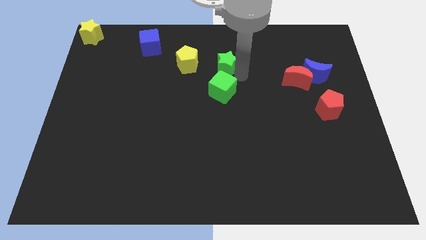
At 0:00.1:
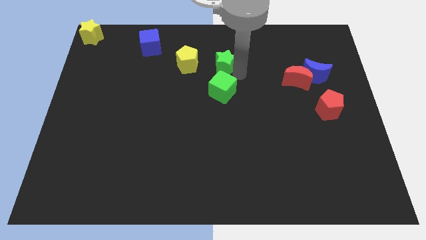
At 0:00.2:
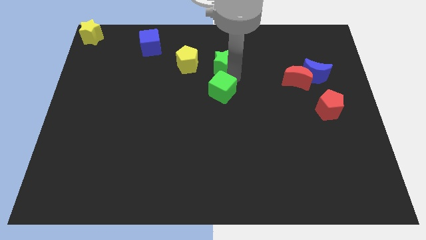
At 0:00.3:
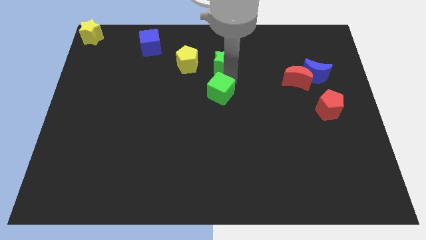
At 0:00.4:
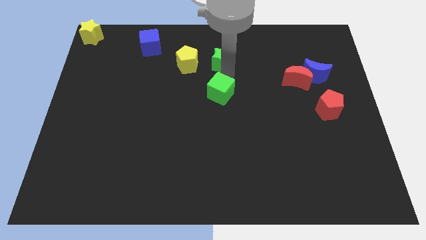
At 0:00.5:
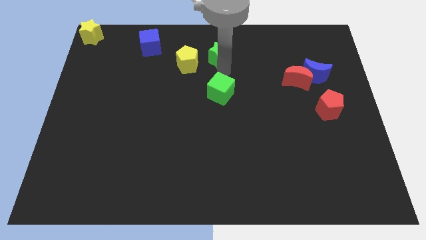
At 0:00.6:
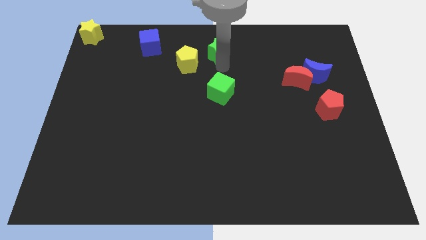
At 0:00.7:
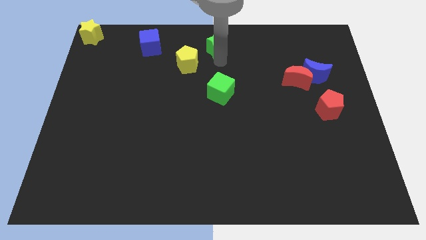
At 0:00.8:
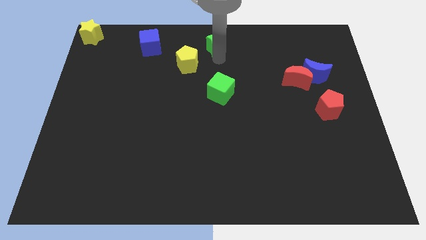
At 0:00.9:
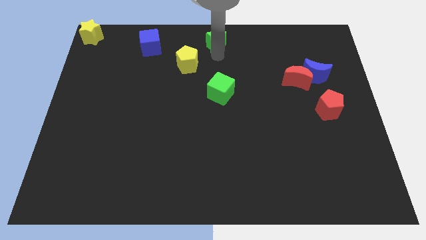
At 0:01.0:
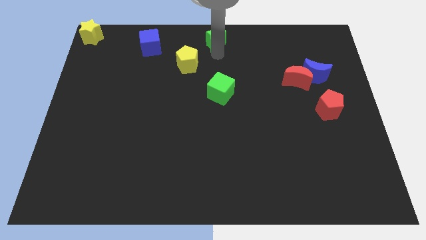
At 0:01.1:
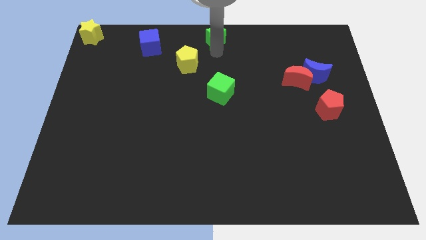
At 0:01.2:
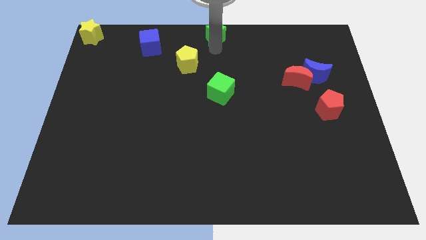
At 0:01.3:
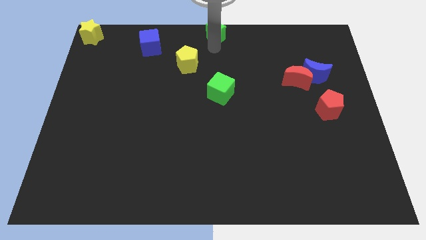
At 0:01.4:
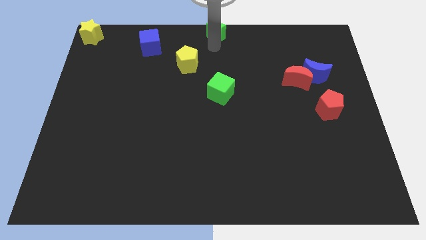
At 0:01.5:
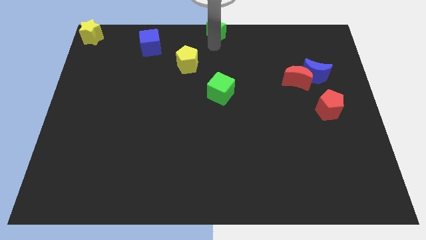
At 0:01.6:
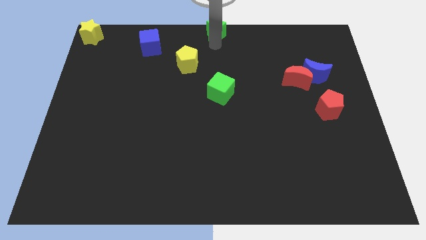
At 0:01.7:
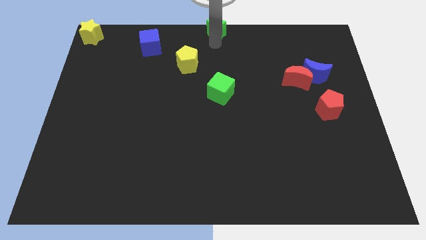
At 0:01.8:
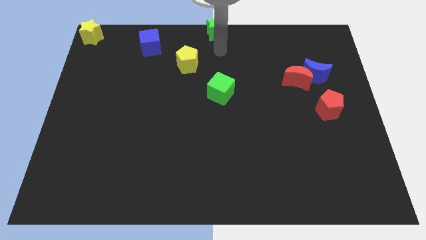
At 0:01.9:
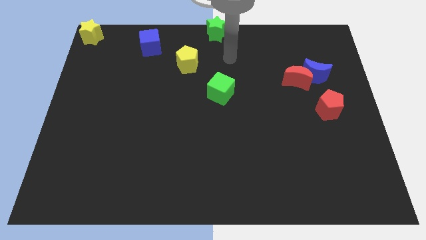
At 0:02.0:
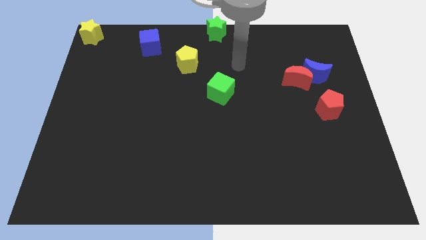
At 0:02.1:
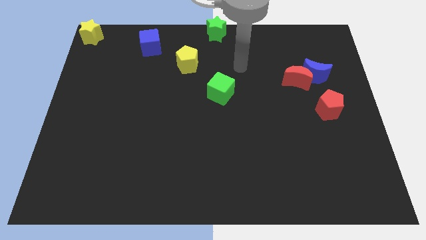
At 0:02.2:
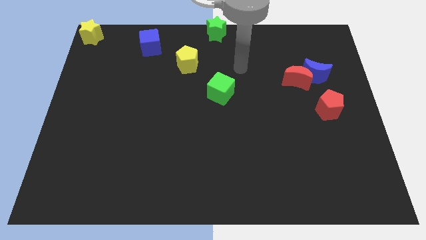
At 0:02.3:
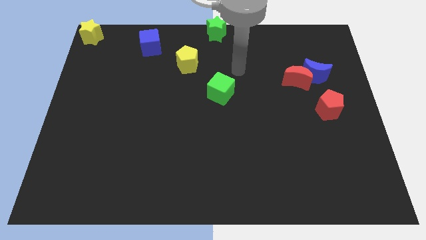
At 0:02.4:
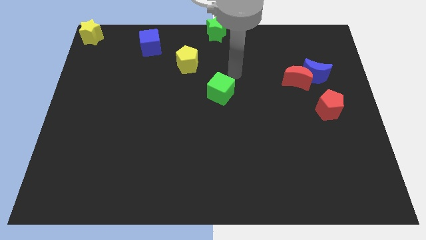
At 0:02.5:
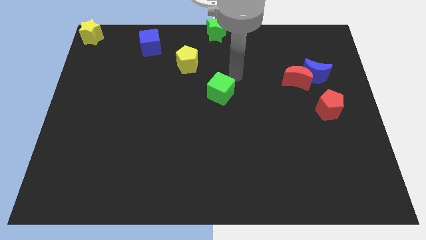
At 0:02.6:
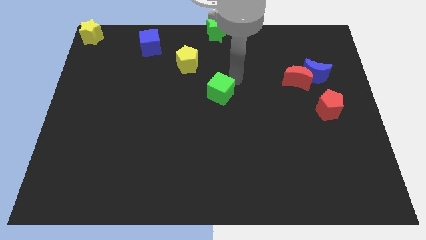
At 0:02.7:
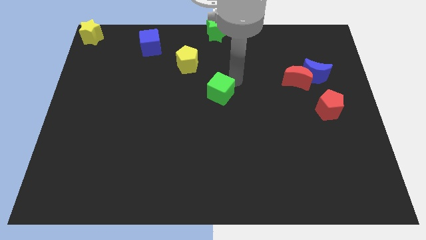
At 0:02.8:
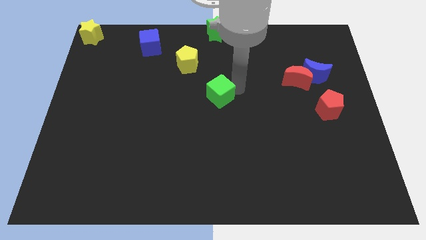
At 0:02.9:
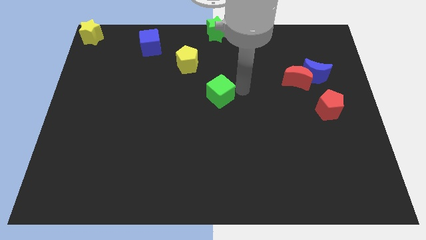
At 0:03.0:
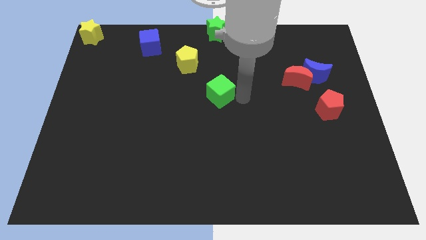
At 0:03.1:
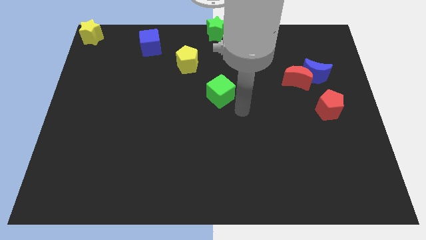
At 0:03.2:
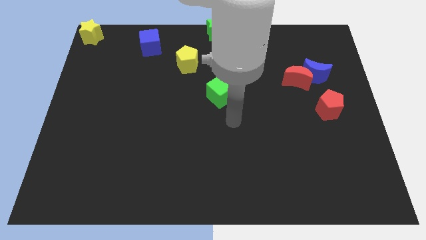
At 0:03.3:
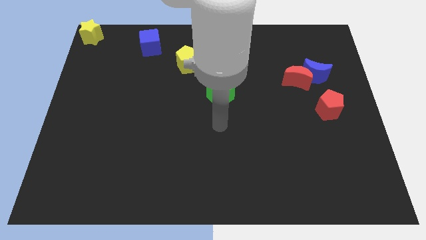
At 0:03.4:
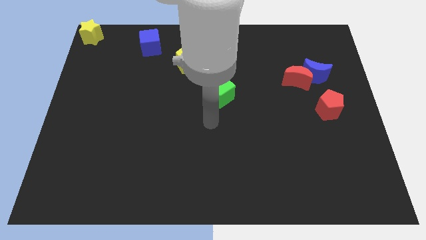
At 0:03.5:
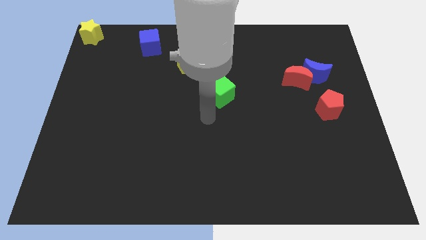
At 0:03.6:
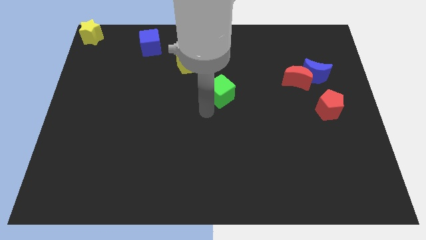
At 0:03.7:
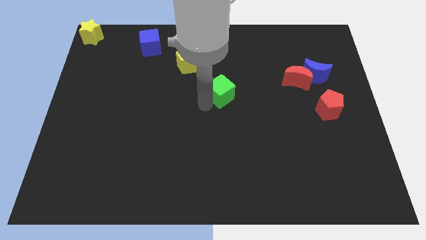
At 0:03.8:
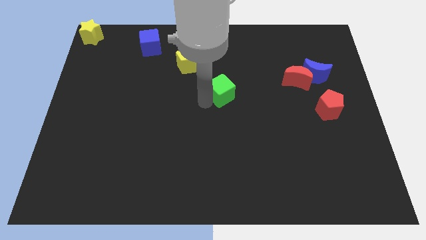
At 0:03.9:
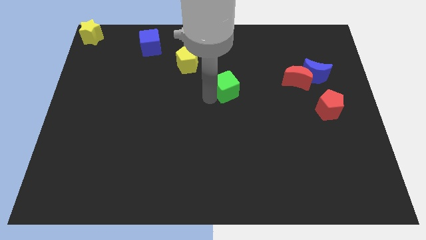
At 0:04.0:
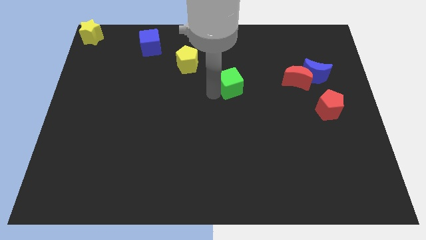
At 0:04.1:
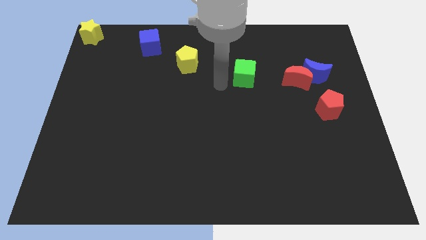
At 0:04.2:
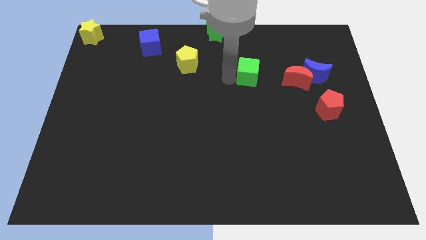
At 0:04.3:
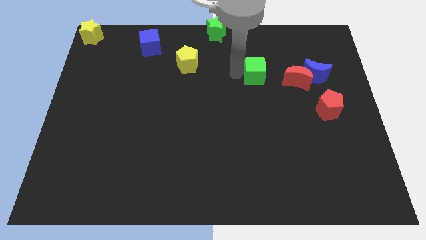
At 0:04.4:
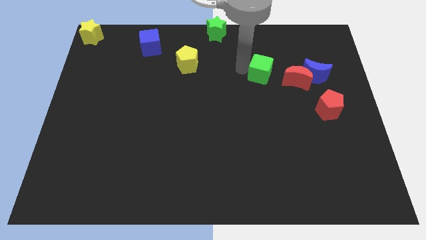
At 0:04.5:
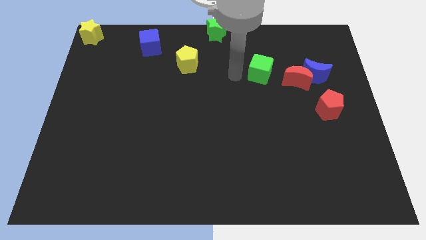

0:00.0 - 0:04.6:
push green cube towards red crescent

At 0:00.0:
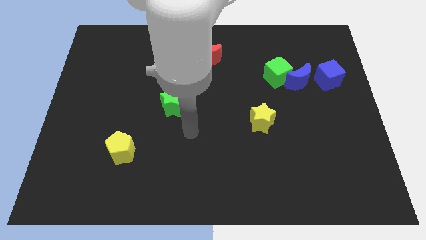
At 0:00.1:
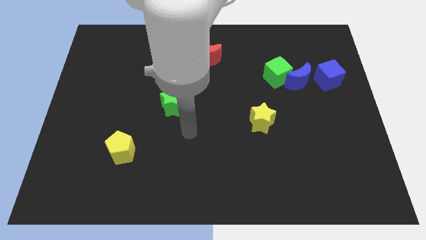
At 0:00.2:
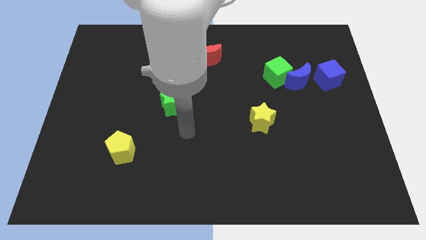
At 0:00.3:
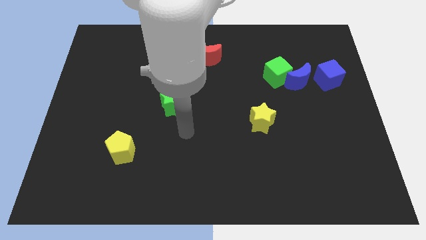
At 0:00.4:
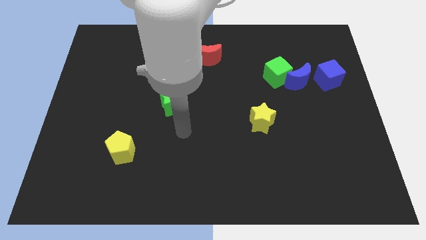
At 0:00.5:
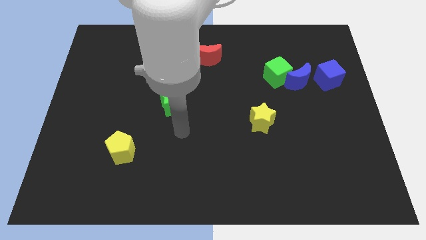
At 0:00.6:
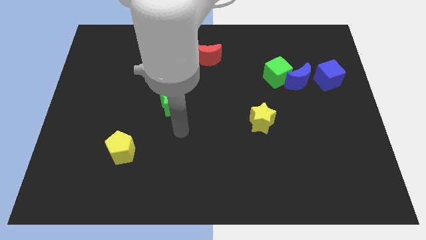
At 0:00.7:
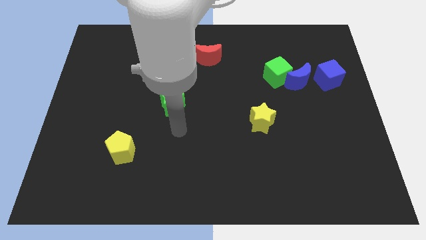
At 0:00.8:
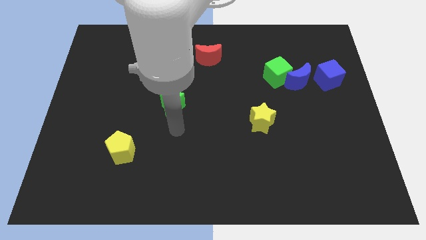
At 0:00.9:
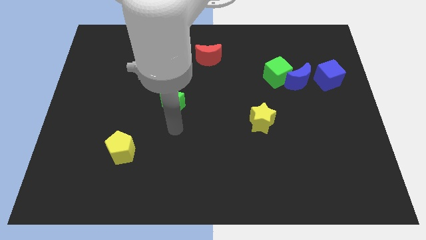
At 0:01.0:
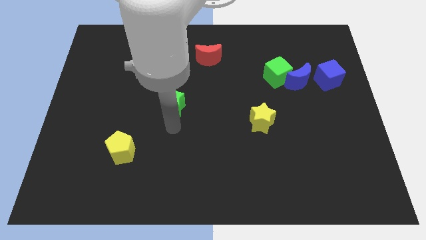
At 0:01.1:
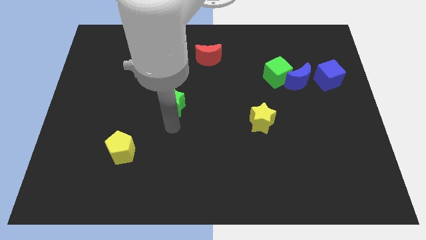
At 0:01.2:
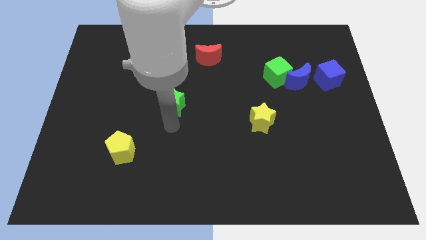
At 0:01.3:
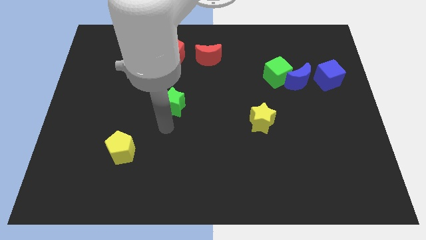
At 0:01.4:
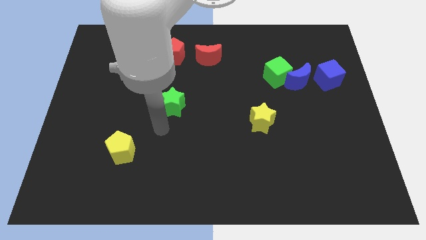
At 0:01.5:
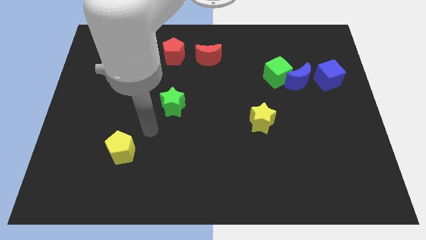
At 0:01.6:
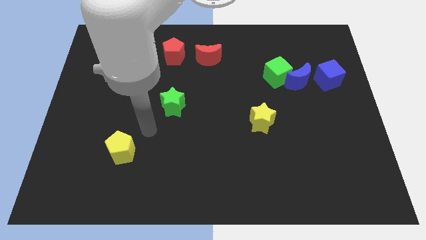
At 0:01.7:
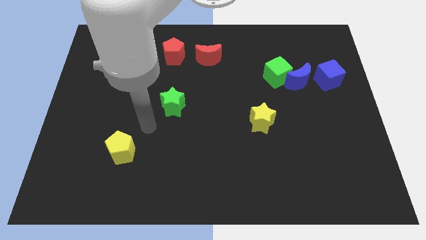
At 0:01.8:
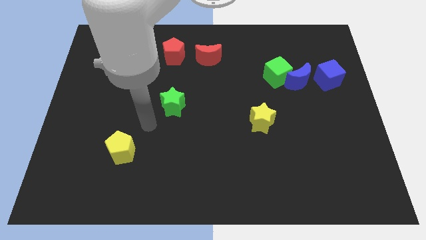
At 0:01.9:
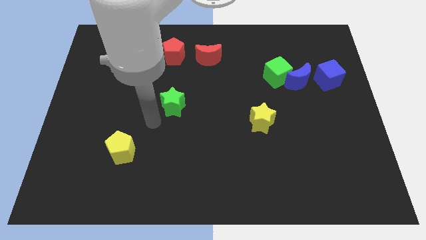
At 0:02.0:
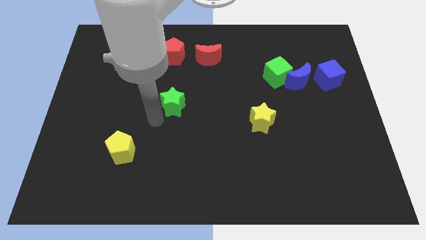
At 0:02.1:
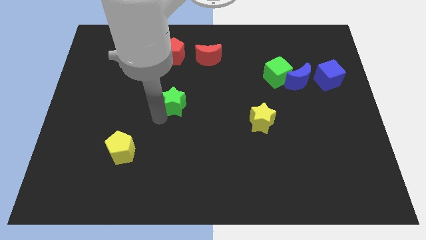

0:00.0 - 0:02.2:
touch the green star

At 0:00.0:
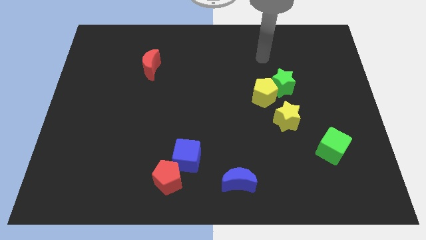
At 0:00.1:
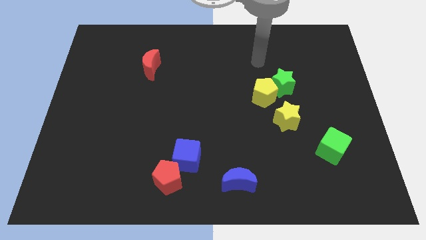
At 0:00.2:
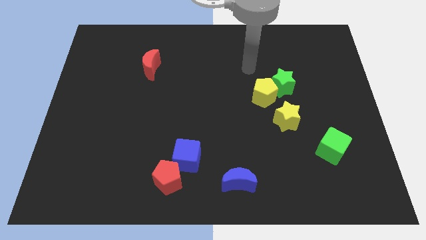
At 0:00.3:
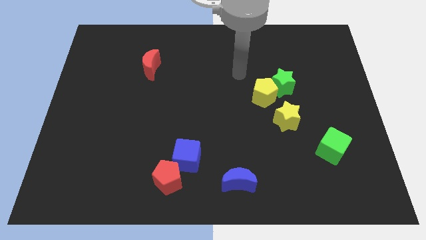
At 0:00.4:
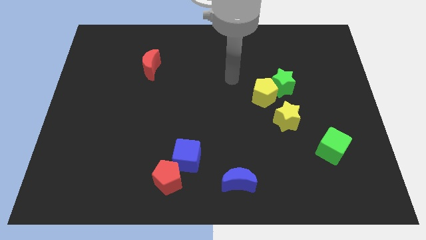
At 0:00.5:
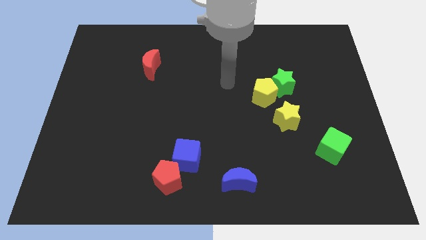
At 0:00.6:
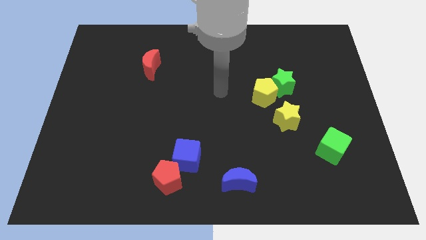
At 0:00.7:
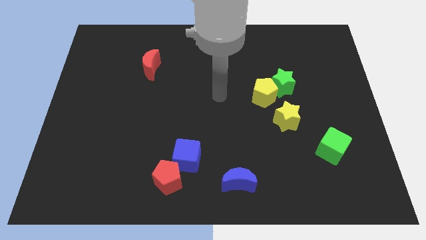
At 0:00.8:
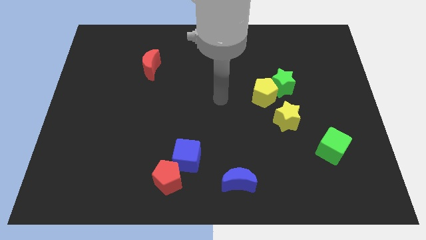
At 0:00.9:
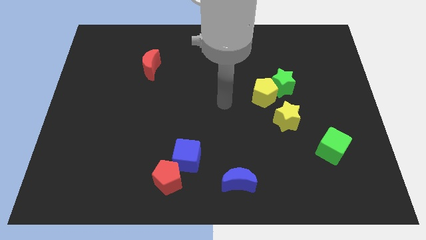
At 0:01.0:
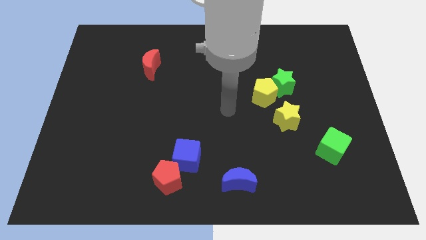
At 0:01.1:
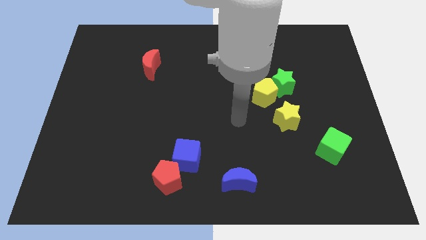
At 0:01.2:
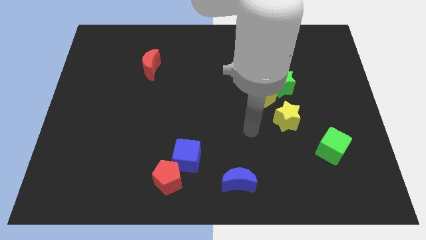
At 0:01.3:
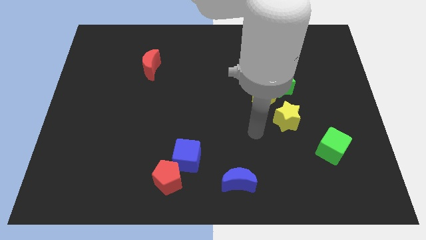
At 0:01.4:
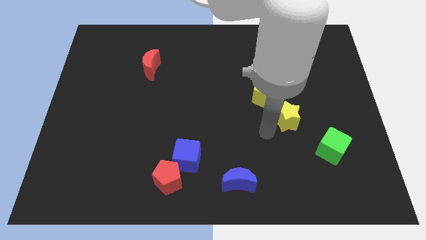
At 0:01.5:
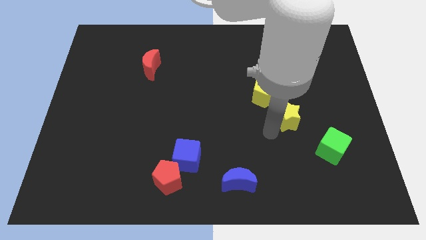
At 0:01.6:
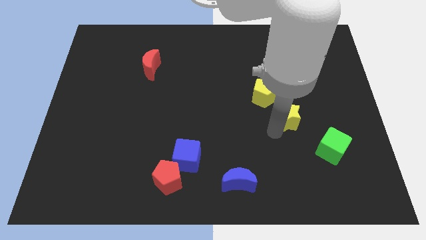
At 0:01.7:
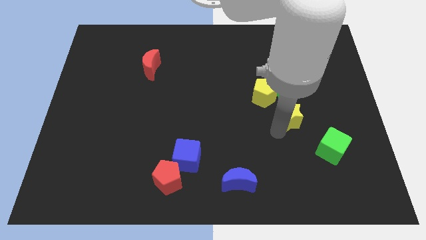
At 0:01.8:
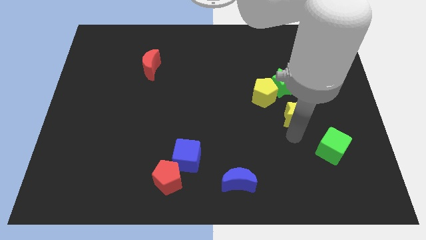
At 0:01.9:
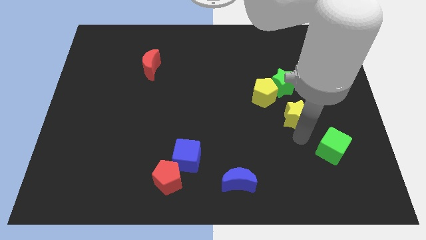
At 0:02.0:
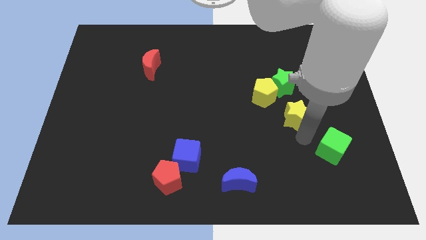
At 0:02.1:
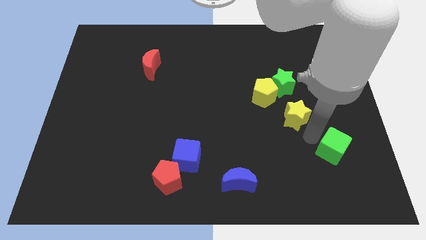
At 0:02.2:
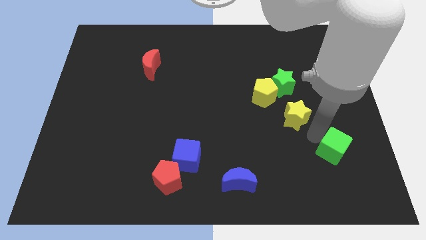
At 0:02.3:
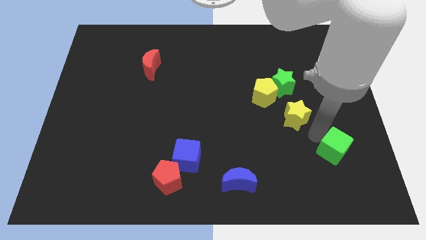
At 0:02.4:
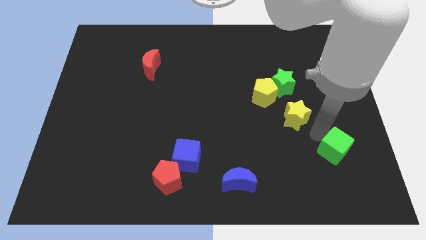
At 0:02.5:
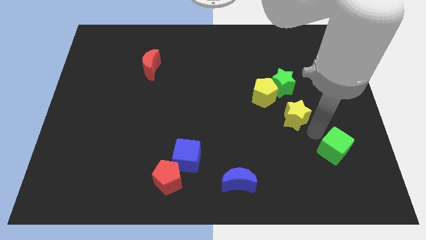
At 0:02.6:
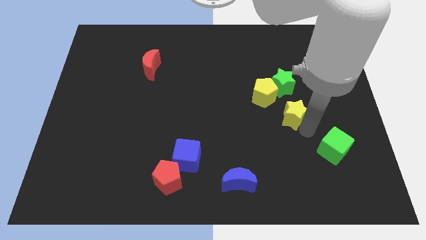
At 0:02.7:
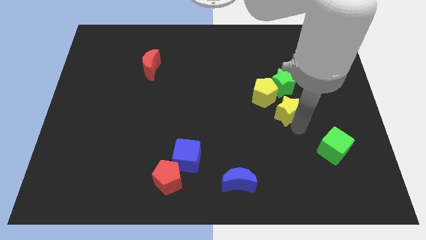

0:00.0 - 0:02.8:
move the arm and push yellow star and green cube
